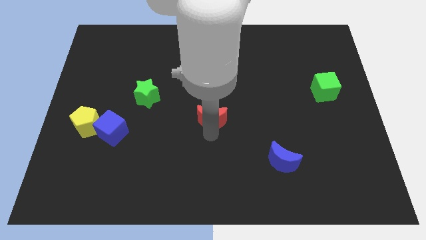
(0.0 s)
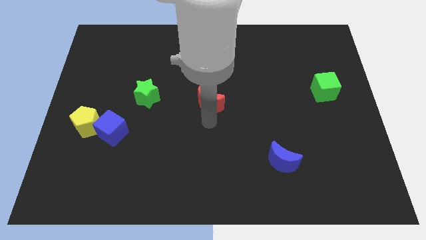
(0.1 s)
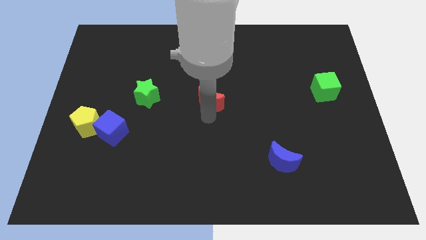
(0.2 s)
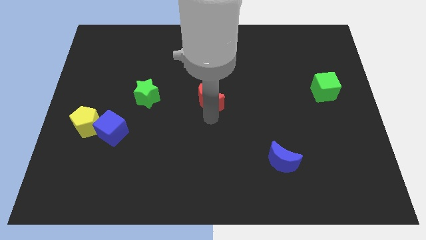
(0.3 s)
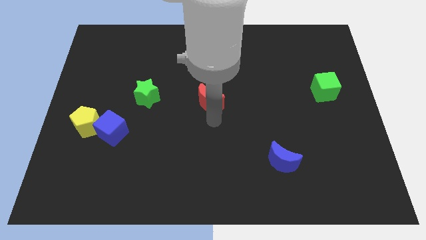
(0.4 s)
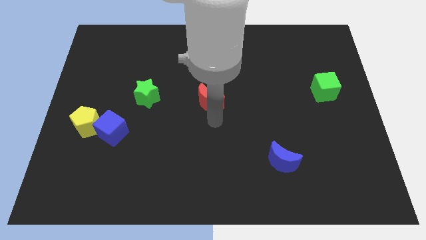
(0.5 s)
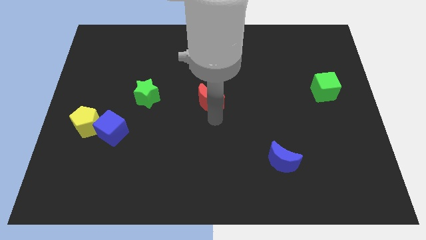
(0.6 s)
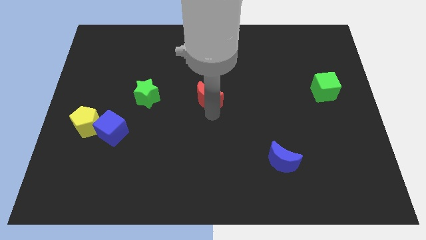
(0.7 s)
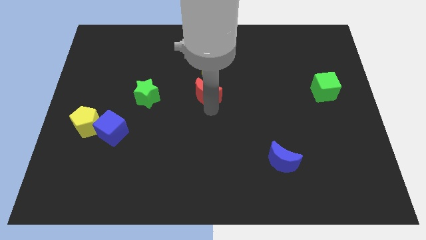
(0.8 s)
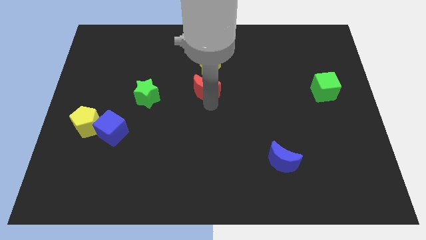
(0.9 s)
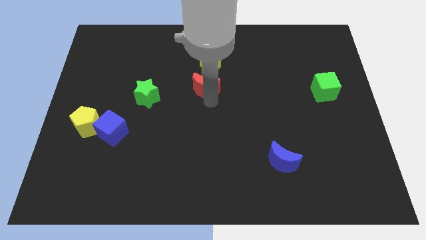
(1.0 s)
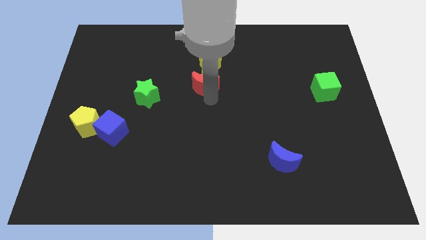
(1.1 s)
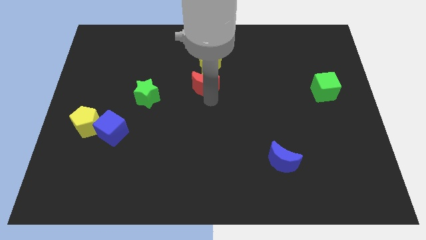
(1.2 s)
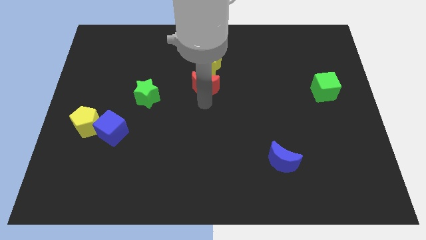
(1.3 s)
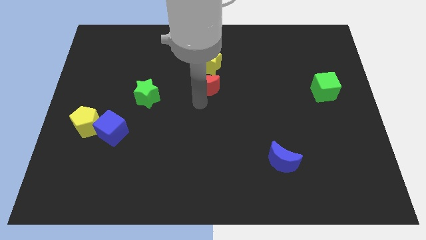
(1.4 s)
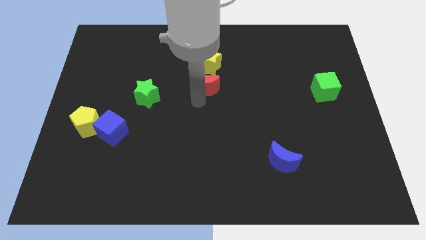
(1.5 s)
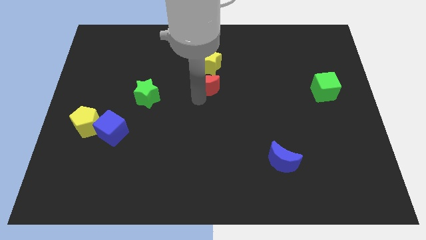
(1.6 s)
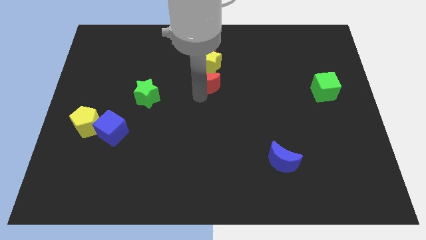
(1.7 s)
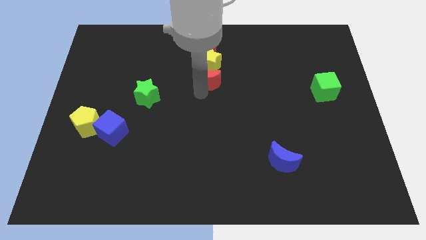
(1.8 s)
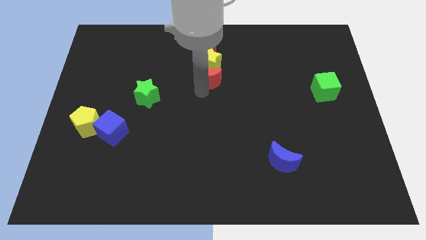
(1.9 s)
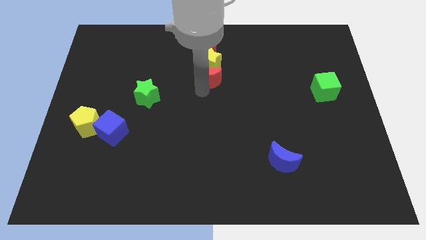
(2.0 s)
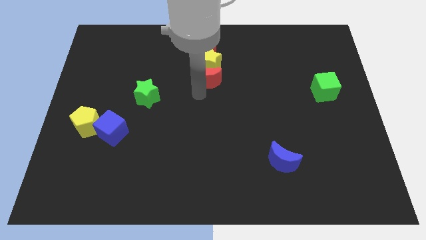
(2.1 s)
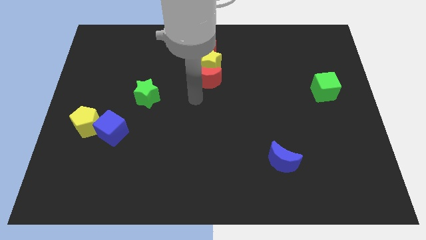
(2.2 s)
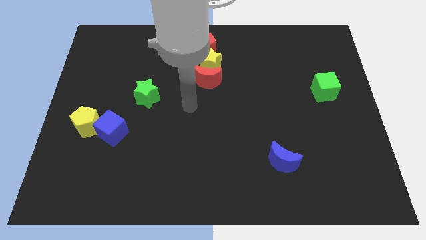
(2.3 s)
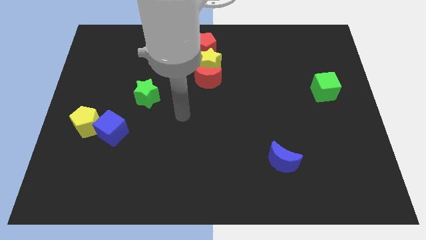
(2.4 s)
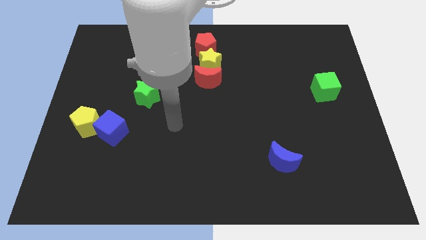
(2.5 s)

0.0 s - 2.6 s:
put the red moon below into yellow star

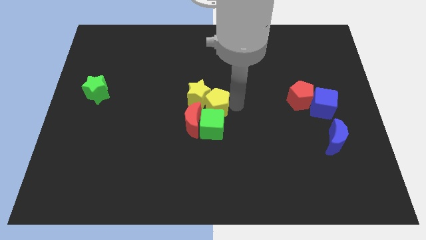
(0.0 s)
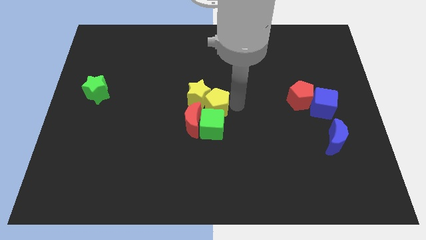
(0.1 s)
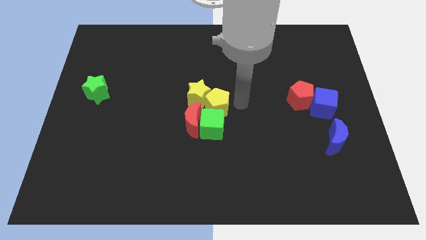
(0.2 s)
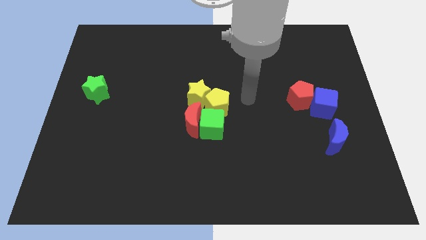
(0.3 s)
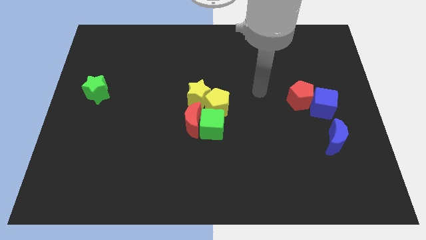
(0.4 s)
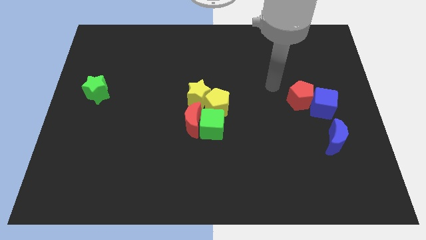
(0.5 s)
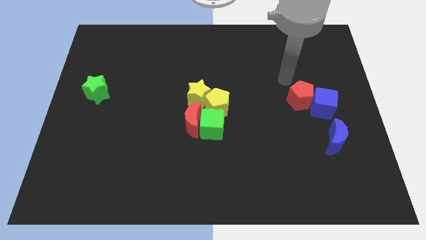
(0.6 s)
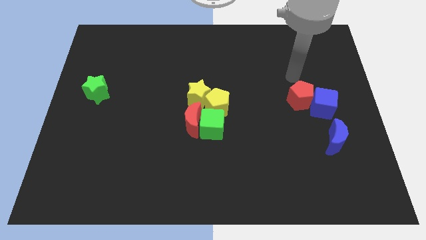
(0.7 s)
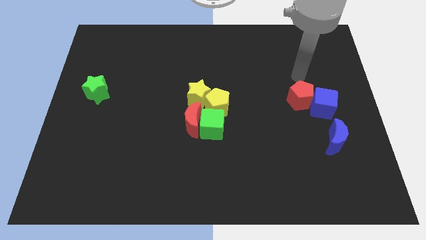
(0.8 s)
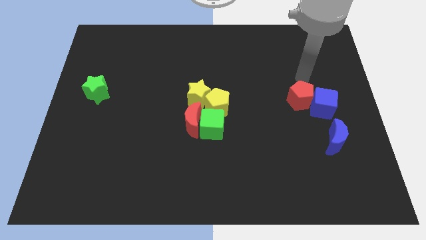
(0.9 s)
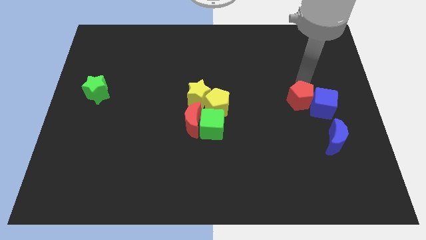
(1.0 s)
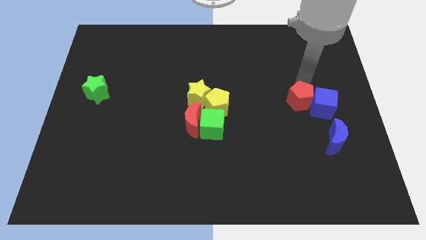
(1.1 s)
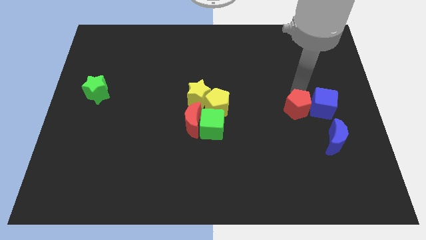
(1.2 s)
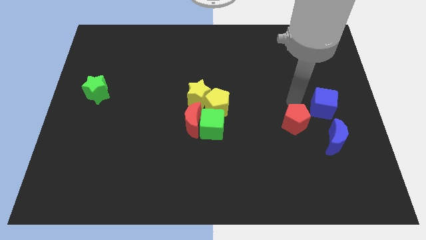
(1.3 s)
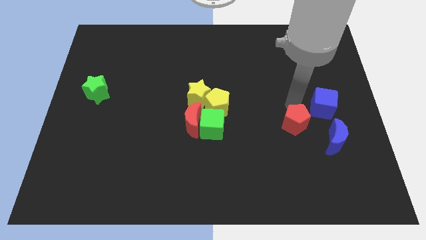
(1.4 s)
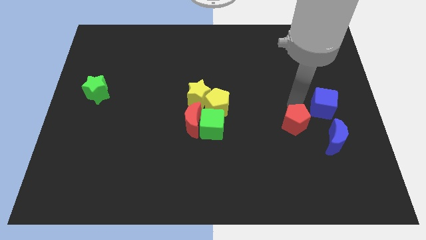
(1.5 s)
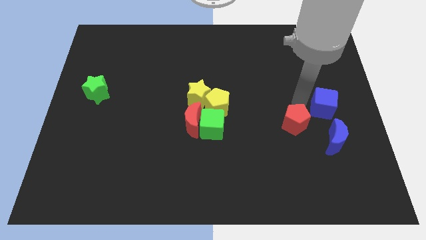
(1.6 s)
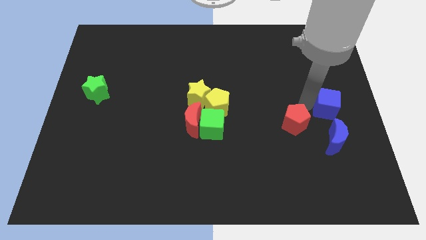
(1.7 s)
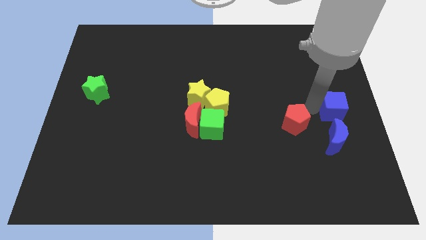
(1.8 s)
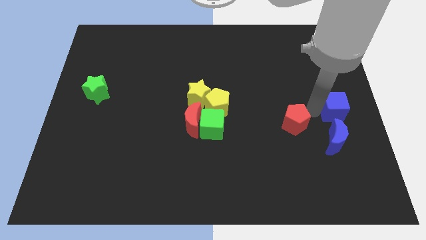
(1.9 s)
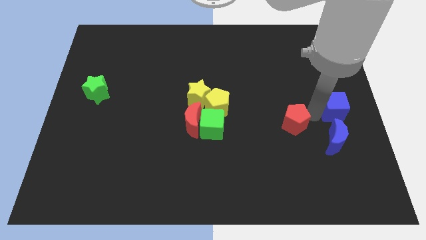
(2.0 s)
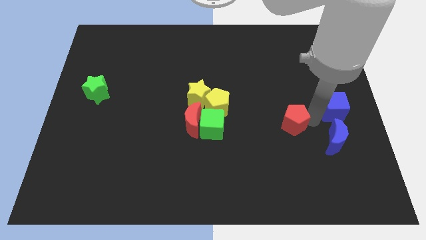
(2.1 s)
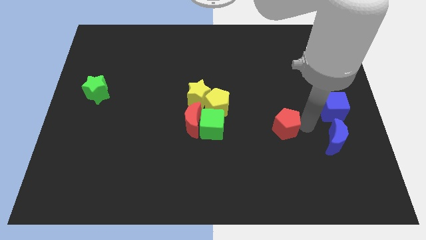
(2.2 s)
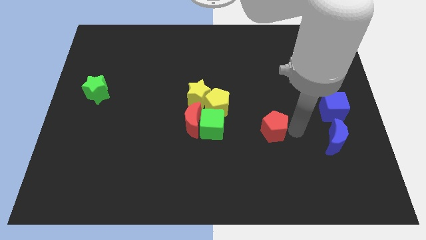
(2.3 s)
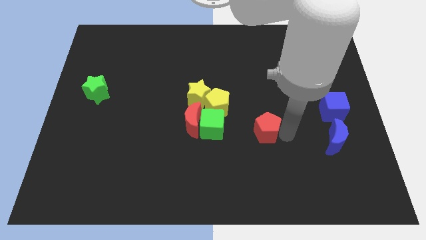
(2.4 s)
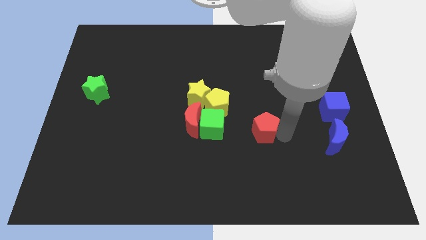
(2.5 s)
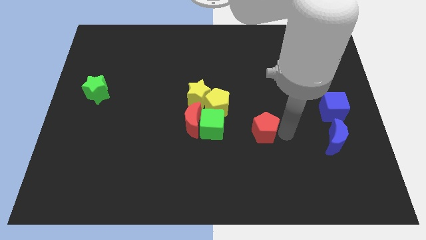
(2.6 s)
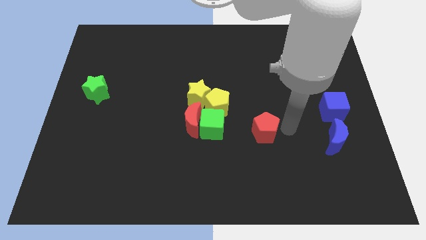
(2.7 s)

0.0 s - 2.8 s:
move red pentagon to the center

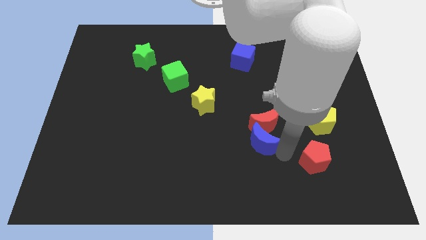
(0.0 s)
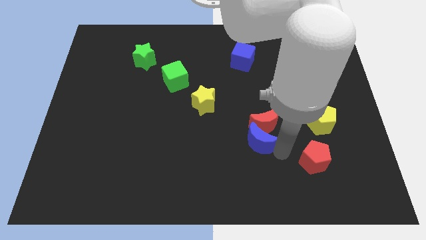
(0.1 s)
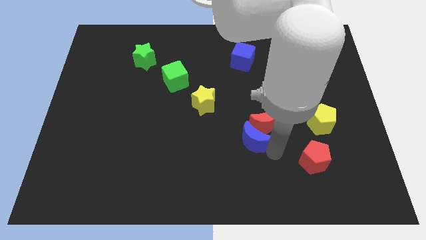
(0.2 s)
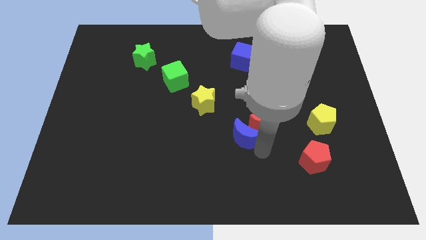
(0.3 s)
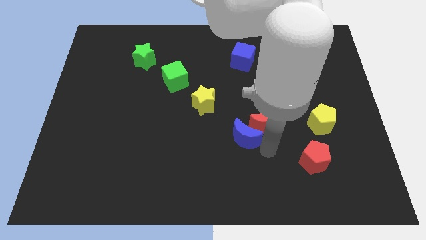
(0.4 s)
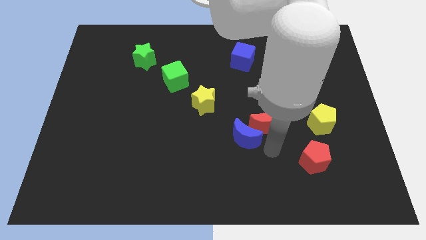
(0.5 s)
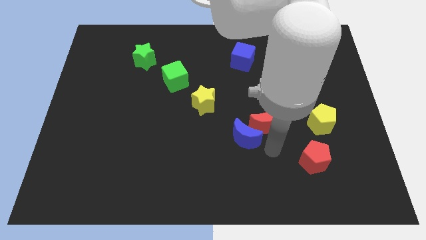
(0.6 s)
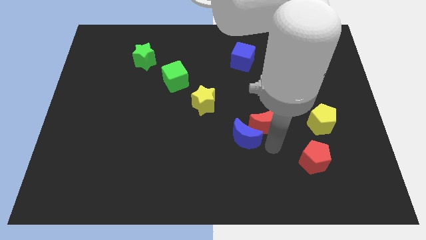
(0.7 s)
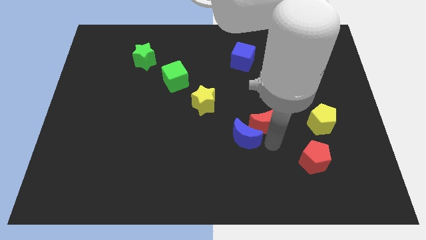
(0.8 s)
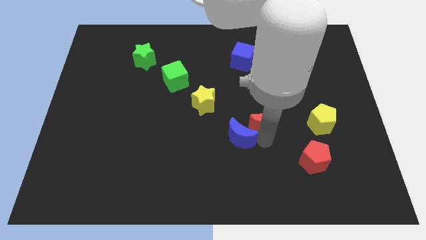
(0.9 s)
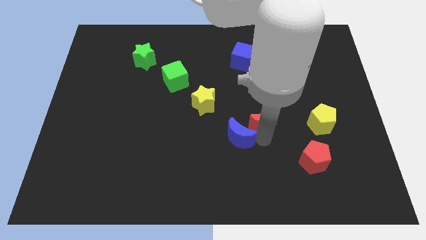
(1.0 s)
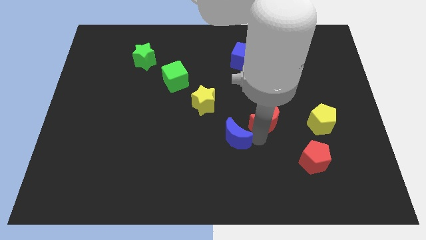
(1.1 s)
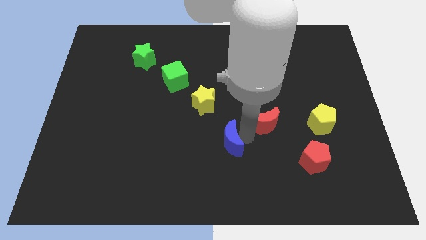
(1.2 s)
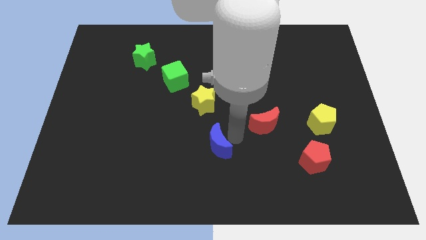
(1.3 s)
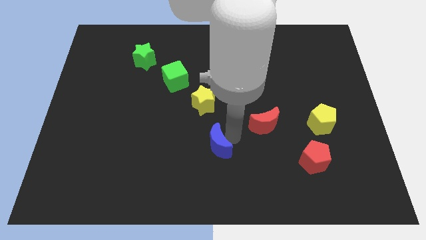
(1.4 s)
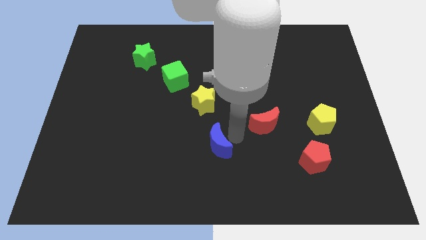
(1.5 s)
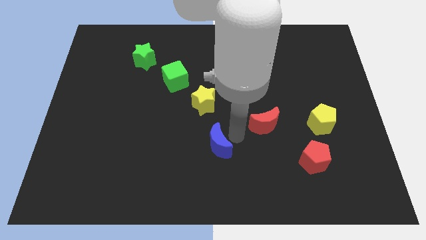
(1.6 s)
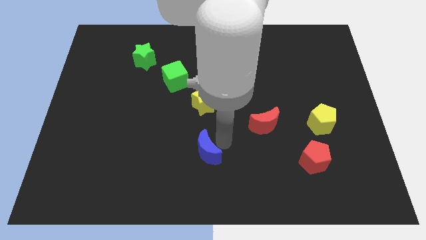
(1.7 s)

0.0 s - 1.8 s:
place the blue crescent below the yellow star

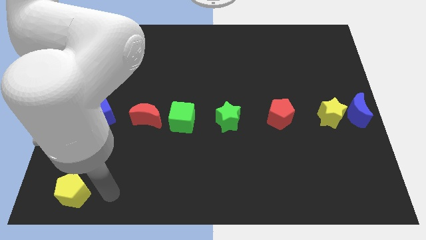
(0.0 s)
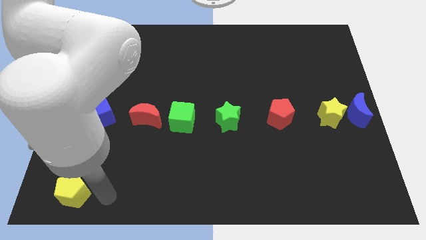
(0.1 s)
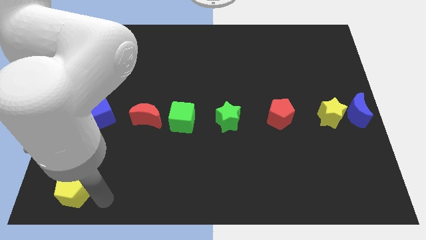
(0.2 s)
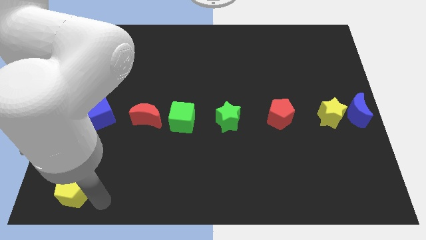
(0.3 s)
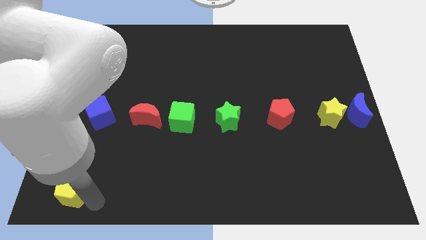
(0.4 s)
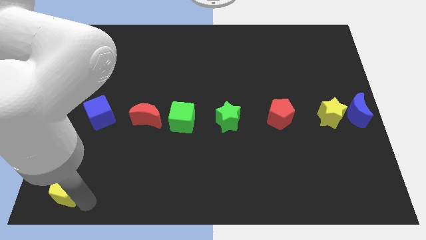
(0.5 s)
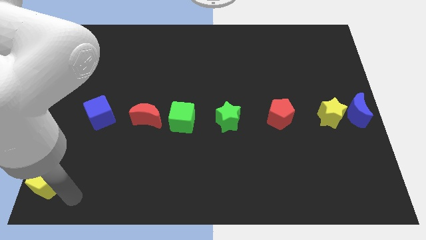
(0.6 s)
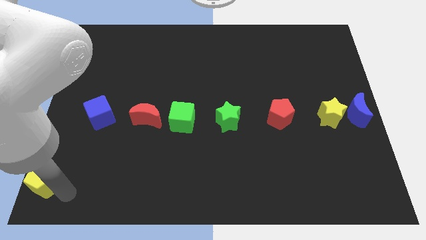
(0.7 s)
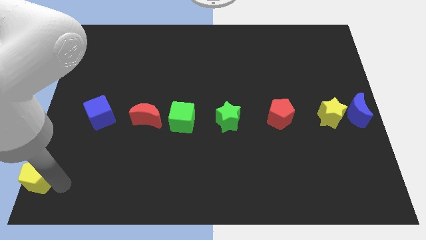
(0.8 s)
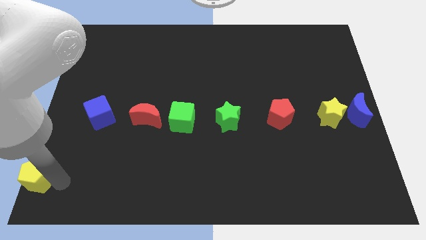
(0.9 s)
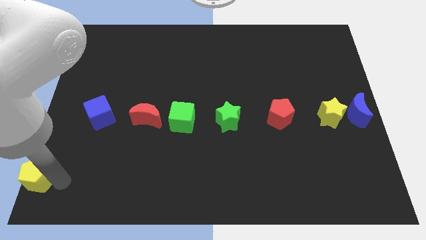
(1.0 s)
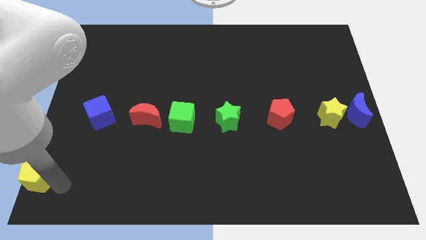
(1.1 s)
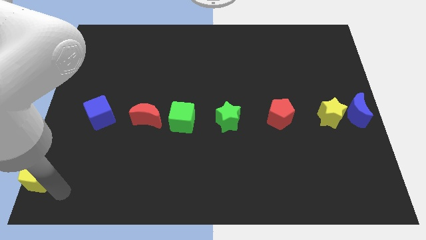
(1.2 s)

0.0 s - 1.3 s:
push the yellow pentagon to the bottom left corner

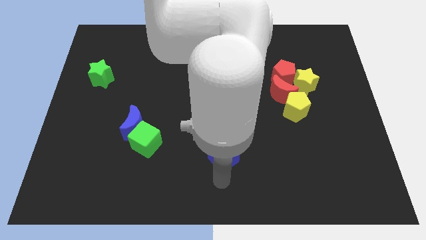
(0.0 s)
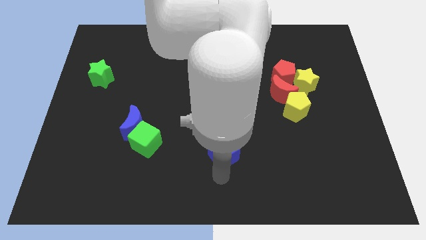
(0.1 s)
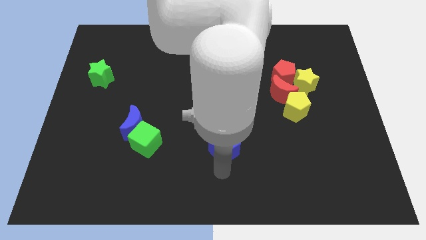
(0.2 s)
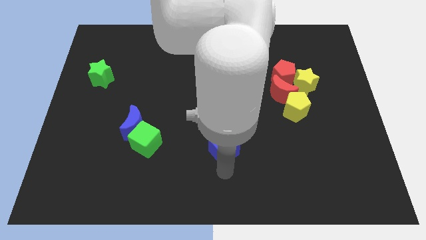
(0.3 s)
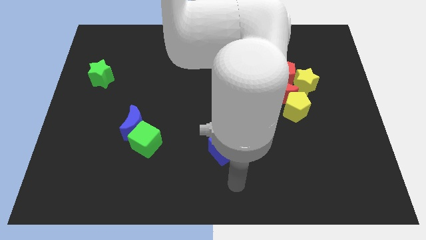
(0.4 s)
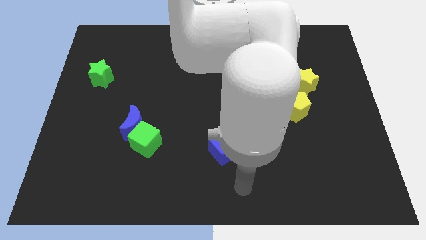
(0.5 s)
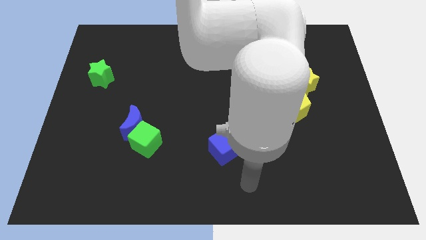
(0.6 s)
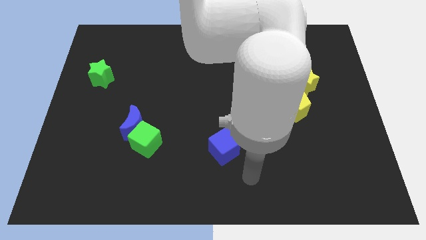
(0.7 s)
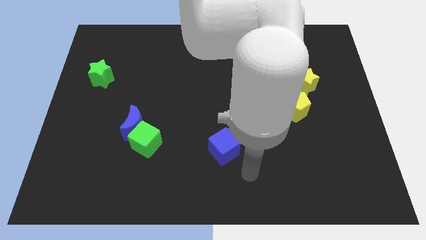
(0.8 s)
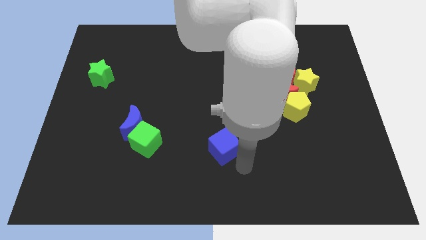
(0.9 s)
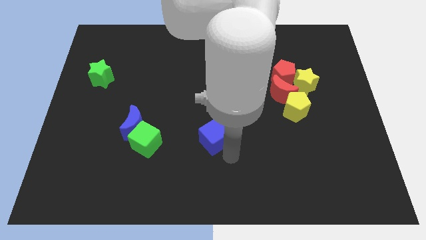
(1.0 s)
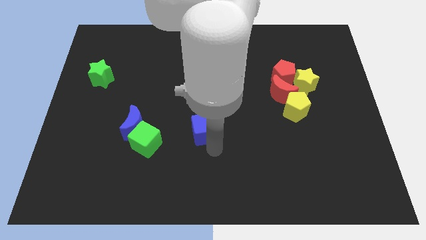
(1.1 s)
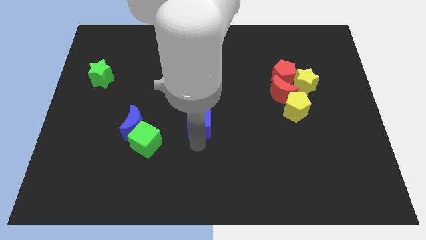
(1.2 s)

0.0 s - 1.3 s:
move the blue cube towards the top side
